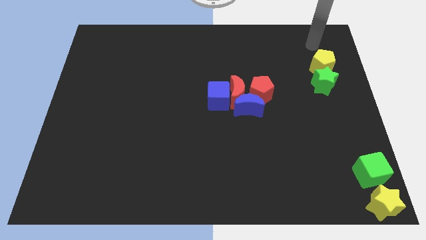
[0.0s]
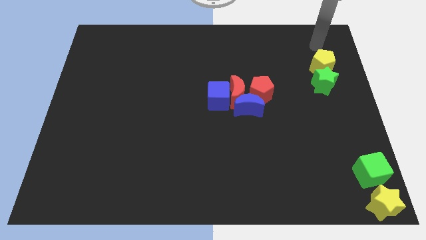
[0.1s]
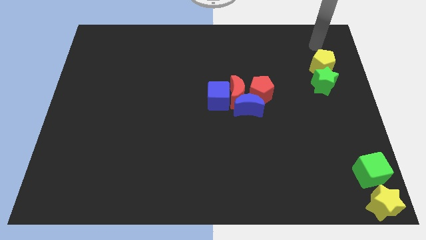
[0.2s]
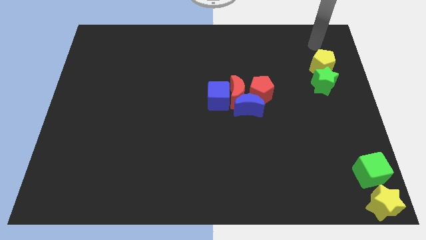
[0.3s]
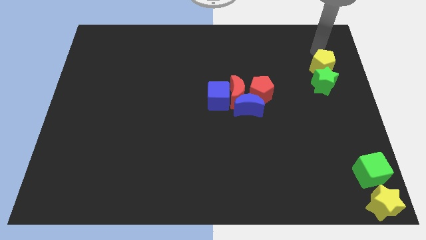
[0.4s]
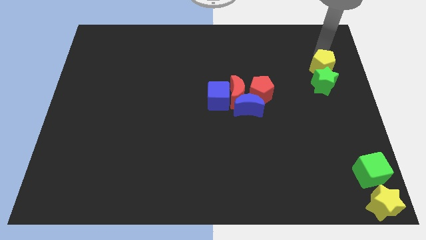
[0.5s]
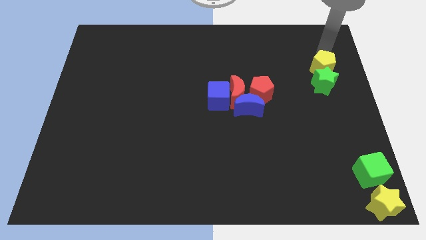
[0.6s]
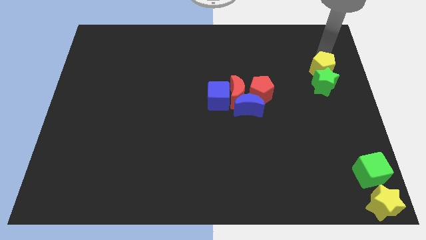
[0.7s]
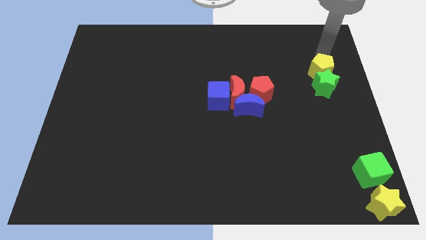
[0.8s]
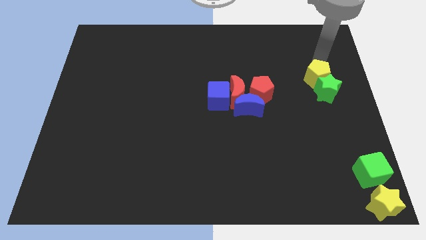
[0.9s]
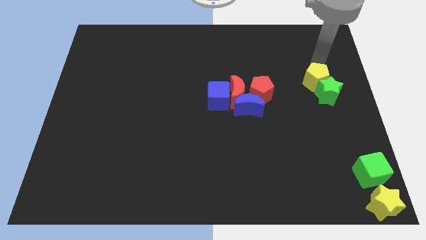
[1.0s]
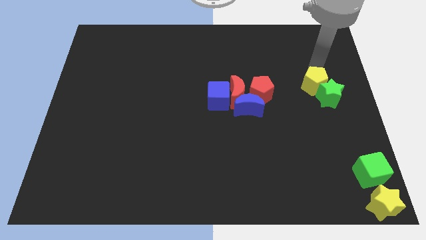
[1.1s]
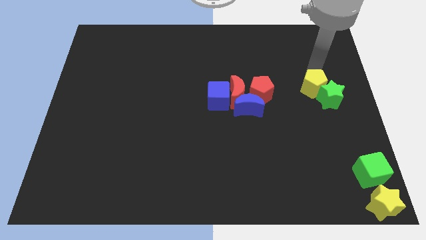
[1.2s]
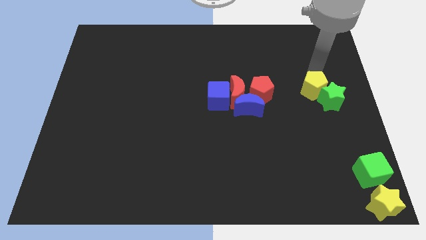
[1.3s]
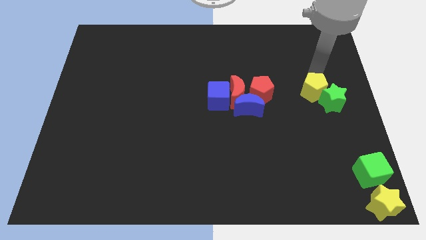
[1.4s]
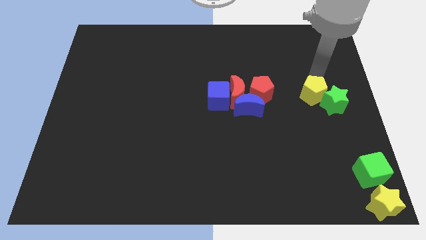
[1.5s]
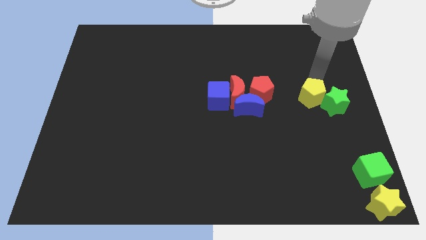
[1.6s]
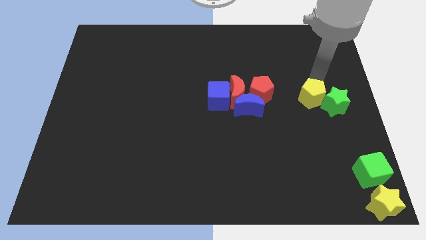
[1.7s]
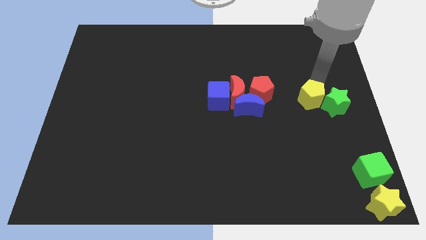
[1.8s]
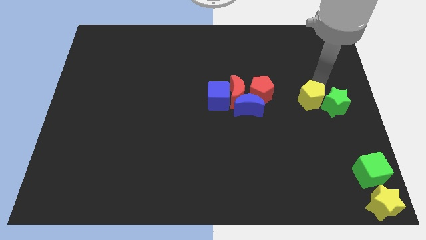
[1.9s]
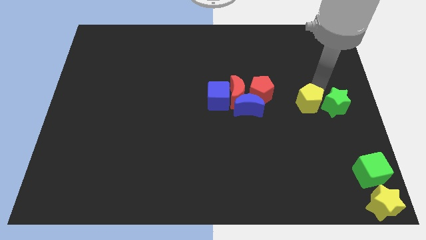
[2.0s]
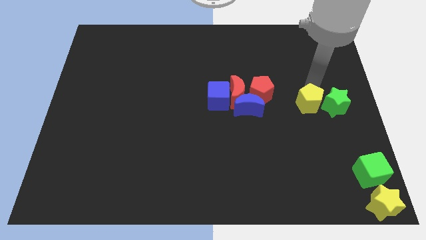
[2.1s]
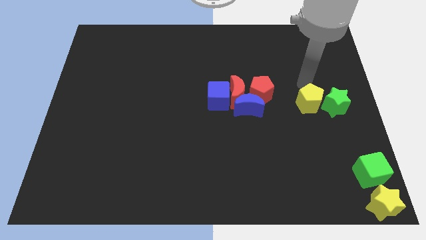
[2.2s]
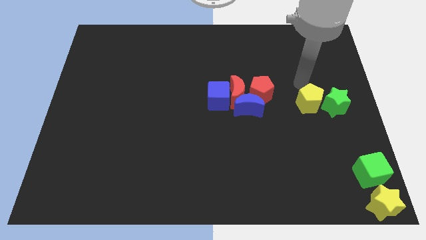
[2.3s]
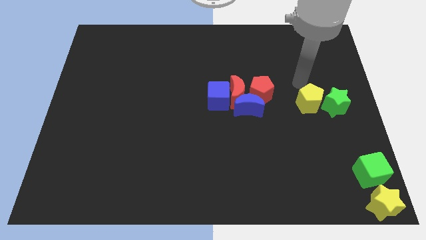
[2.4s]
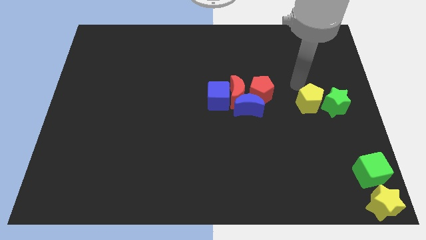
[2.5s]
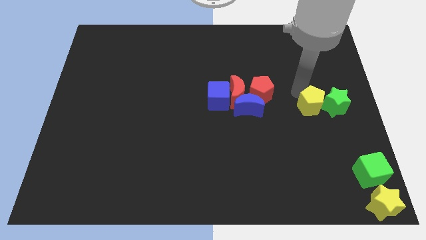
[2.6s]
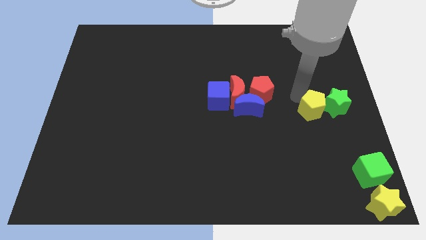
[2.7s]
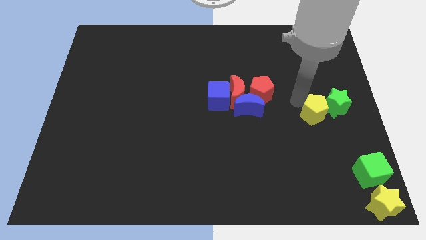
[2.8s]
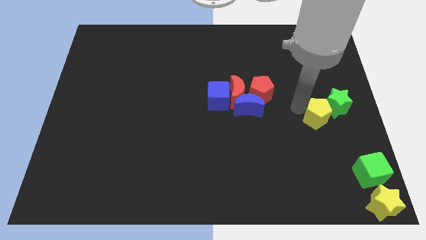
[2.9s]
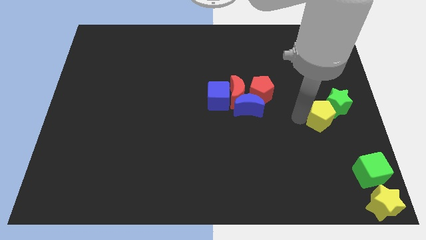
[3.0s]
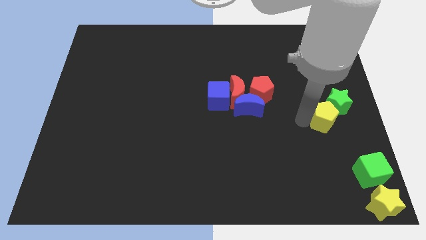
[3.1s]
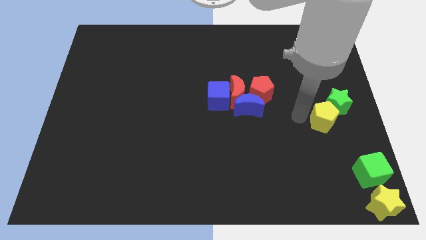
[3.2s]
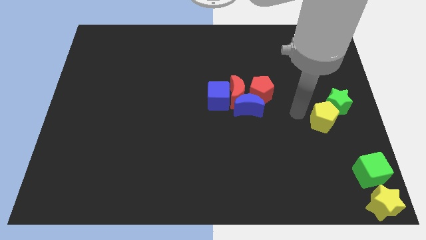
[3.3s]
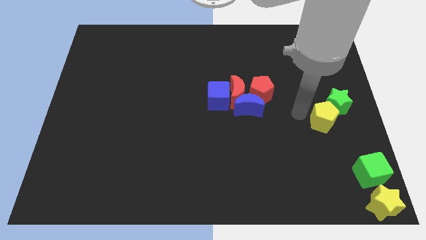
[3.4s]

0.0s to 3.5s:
place the green star to the top of the green cube using the yellow pentagon

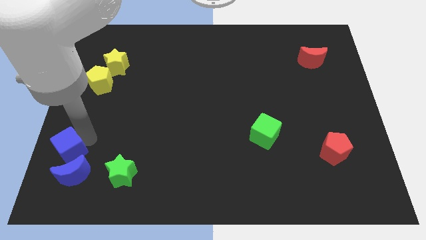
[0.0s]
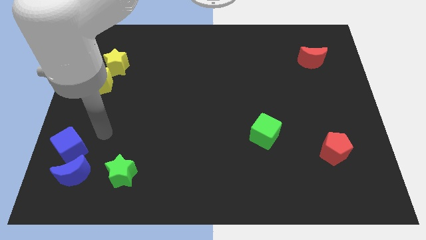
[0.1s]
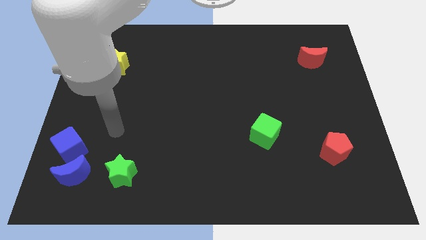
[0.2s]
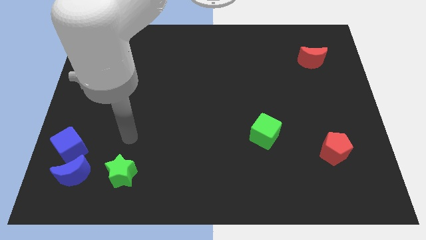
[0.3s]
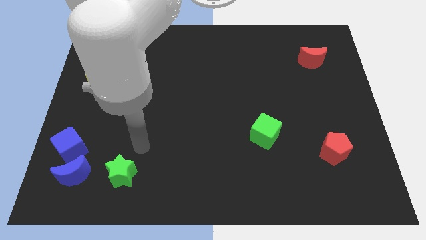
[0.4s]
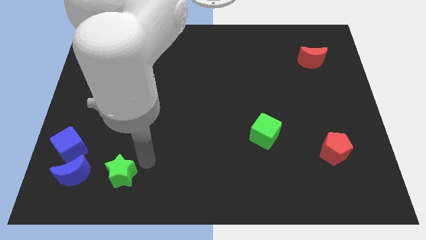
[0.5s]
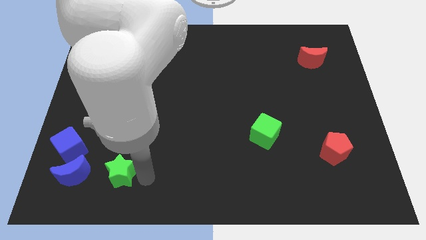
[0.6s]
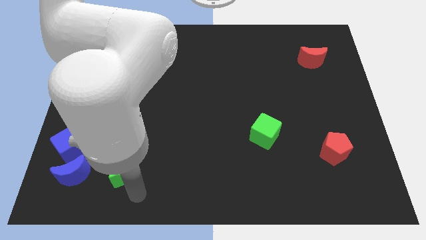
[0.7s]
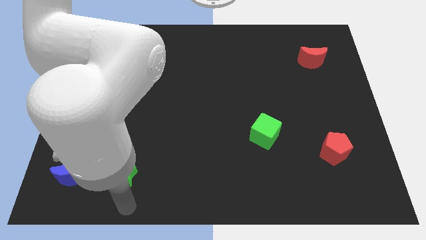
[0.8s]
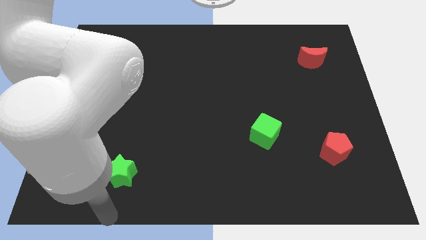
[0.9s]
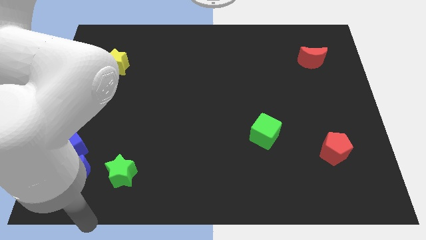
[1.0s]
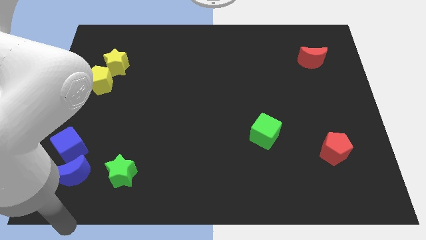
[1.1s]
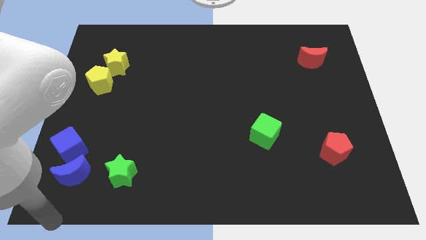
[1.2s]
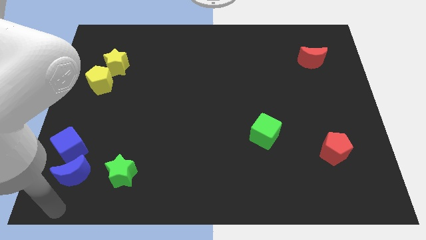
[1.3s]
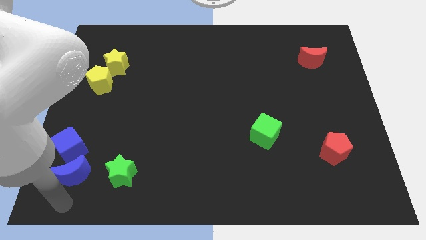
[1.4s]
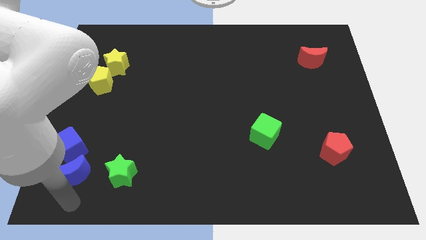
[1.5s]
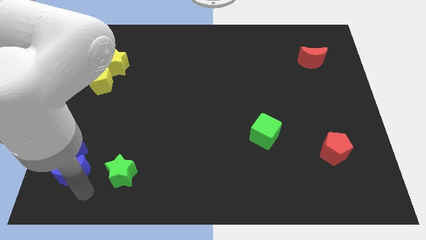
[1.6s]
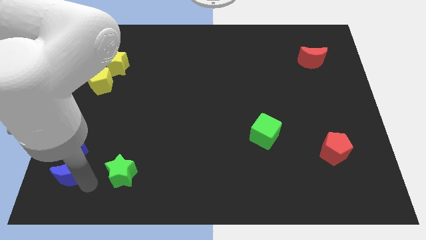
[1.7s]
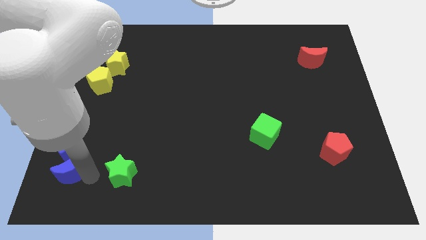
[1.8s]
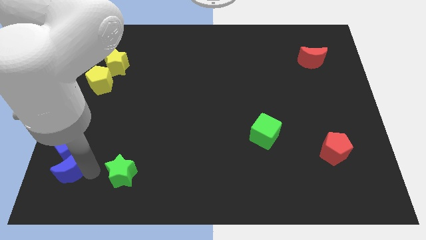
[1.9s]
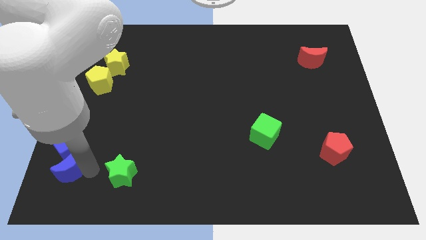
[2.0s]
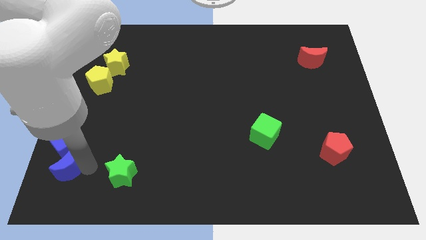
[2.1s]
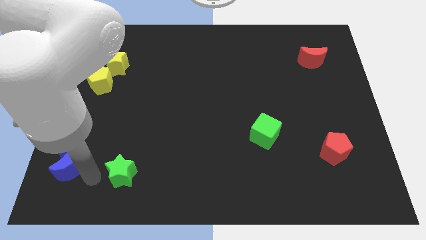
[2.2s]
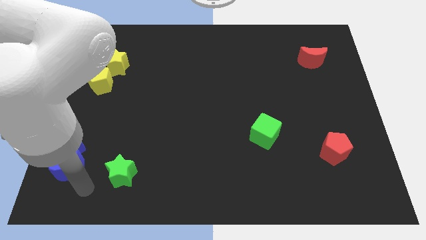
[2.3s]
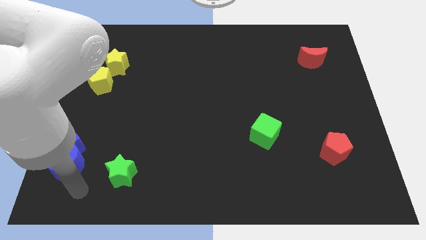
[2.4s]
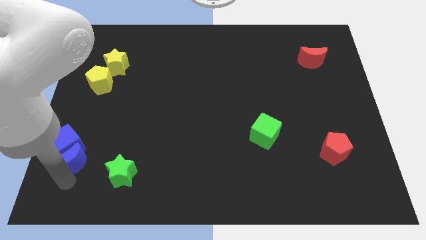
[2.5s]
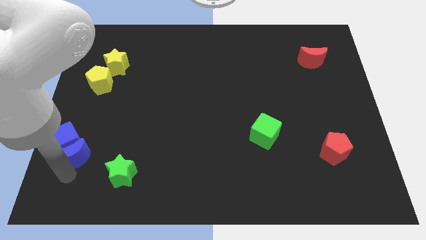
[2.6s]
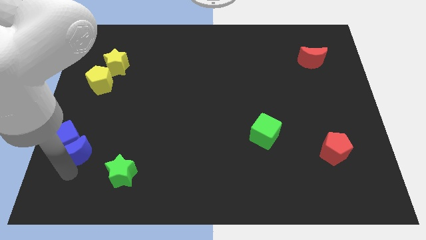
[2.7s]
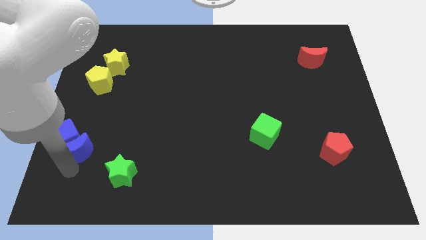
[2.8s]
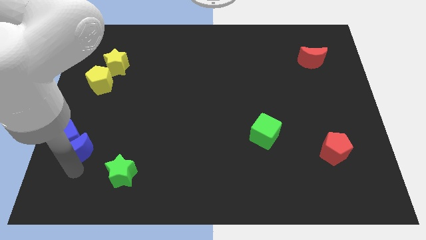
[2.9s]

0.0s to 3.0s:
push the blue blocks towards the left side of the board

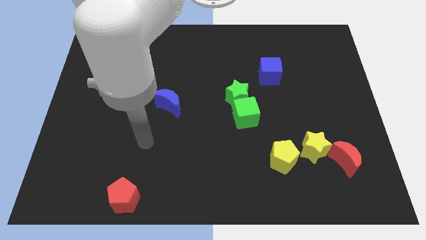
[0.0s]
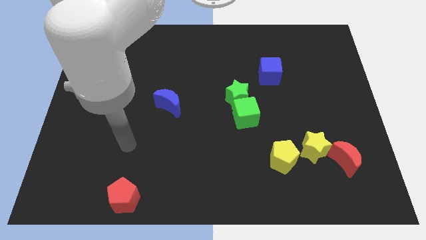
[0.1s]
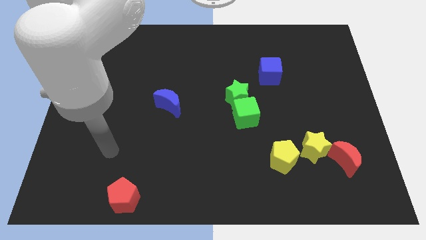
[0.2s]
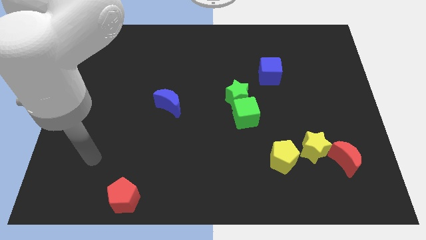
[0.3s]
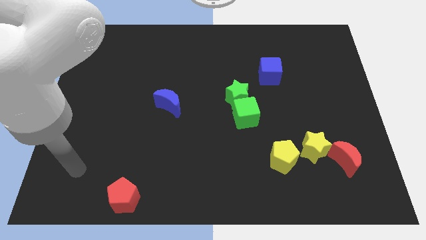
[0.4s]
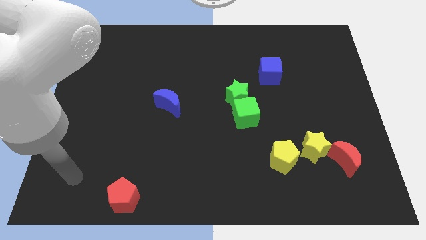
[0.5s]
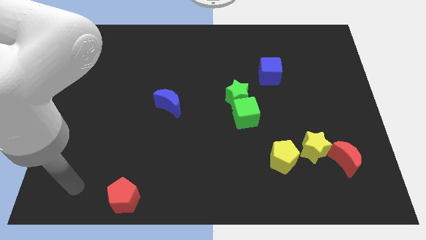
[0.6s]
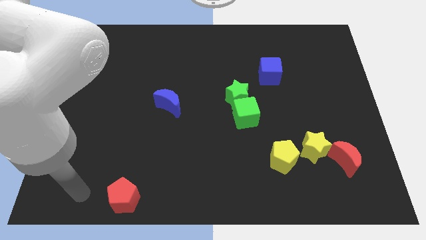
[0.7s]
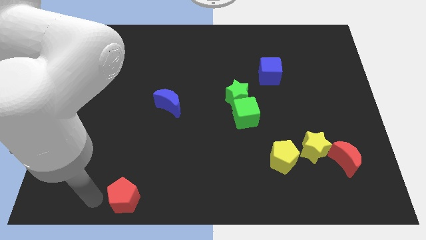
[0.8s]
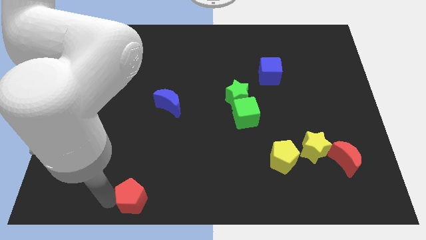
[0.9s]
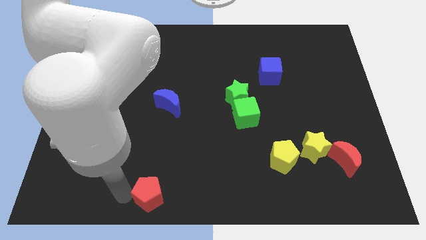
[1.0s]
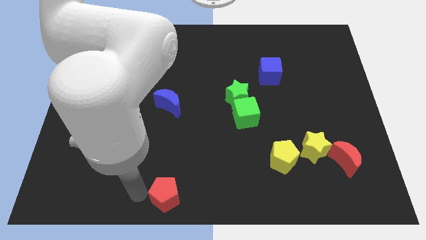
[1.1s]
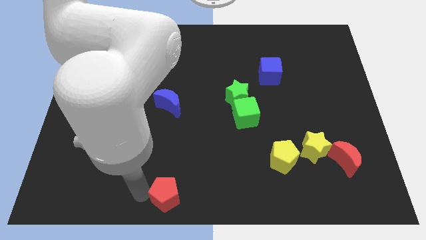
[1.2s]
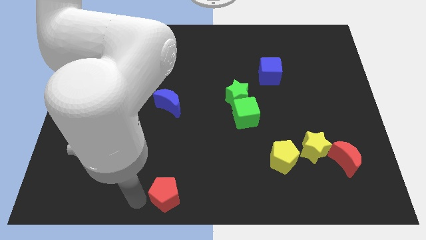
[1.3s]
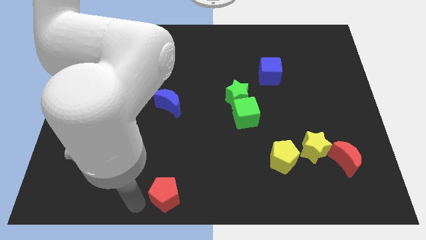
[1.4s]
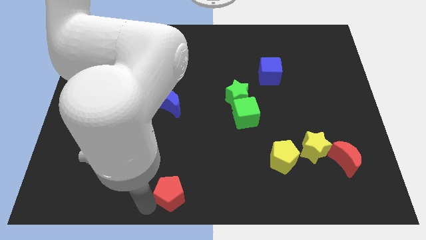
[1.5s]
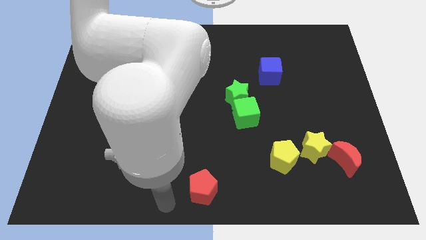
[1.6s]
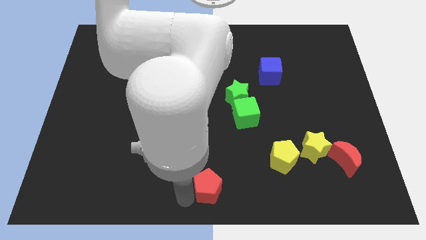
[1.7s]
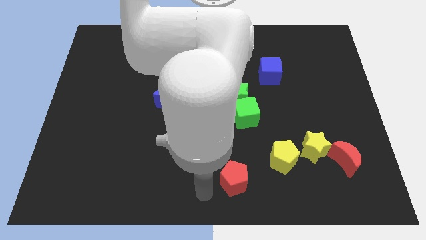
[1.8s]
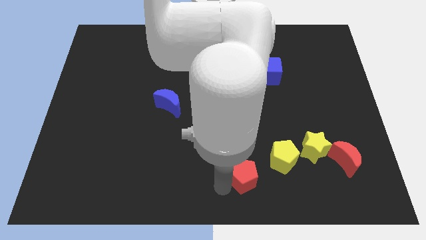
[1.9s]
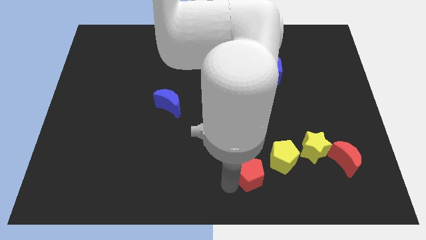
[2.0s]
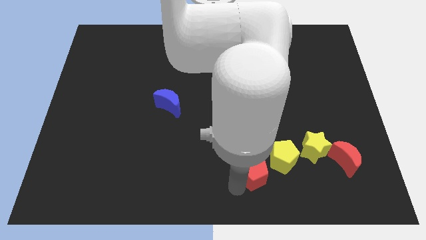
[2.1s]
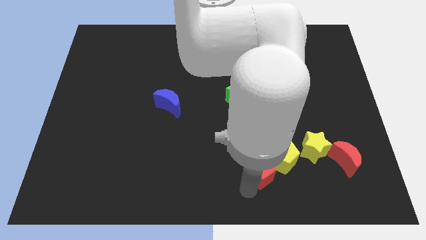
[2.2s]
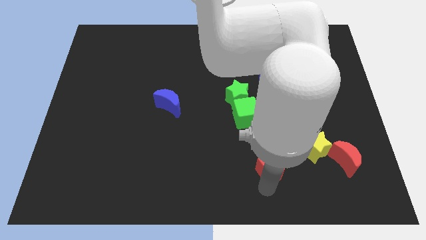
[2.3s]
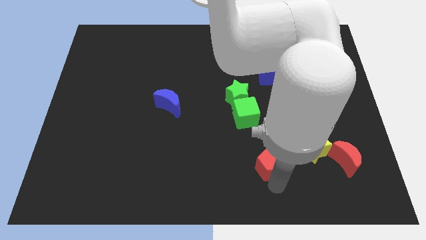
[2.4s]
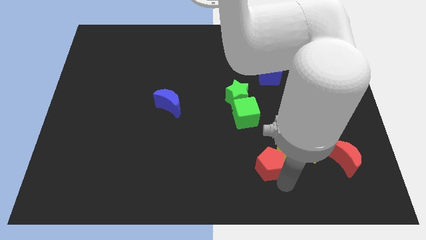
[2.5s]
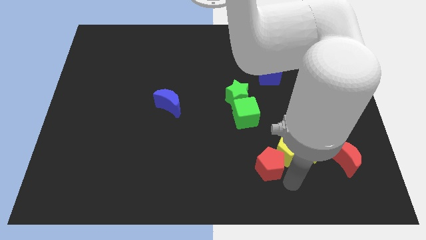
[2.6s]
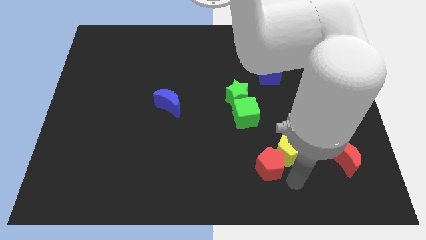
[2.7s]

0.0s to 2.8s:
push red pentagon towards yellow pentagon
